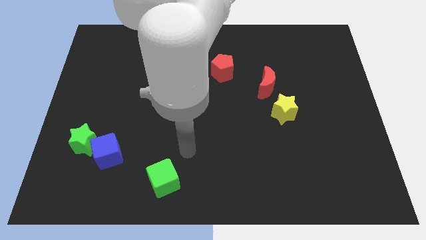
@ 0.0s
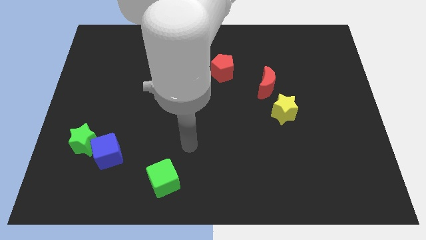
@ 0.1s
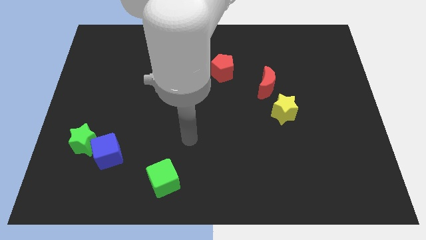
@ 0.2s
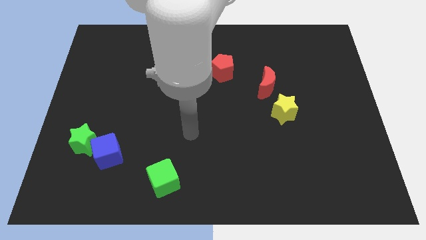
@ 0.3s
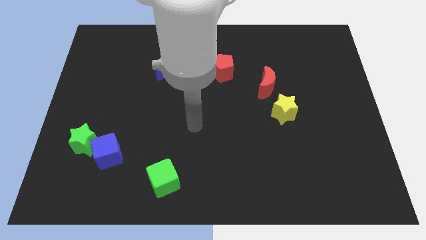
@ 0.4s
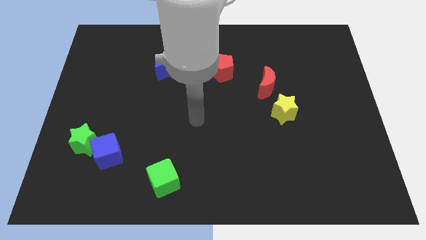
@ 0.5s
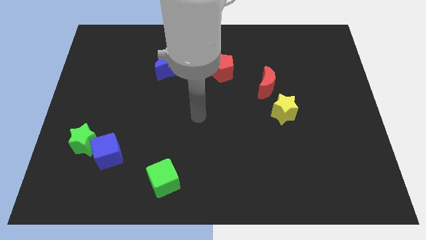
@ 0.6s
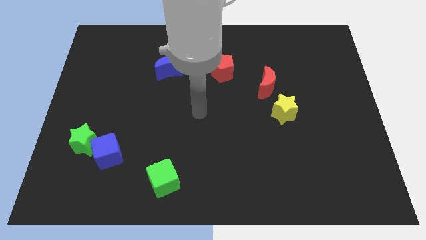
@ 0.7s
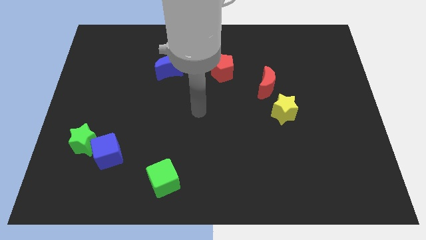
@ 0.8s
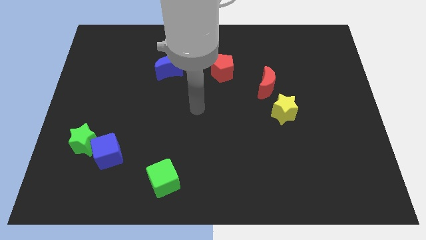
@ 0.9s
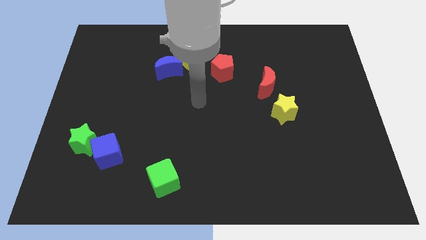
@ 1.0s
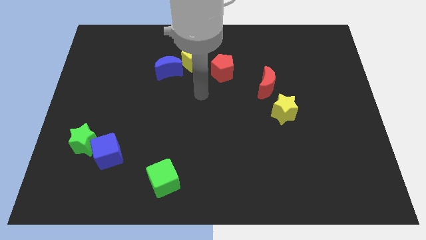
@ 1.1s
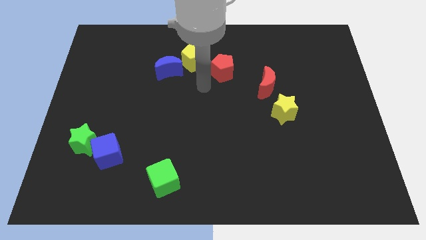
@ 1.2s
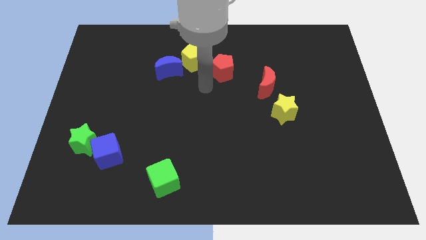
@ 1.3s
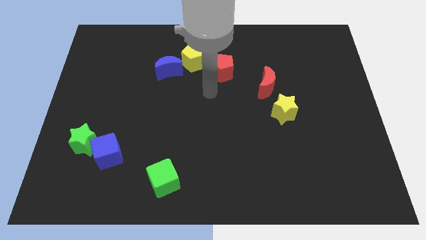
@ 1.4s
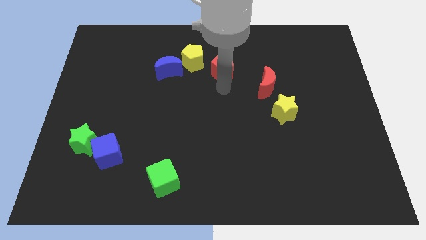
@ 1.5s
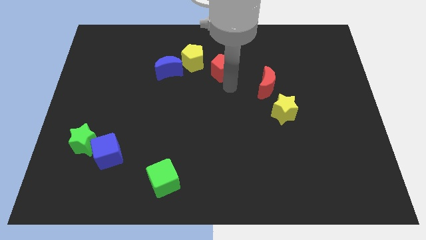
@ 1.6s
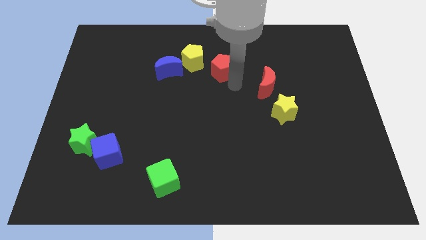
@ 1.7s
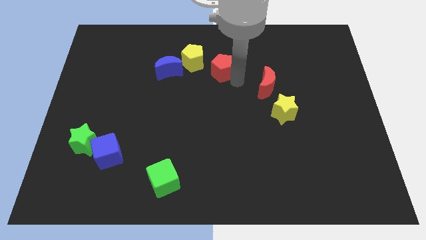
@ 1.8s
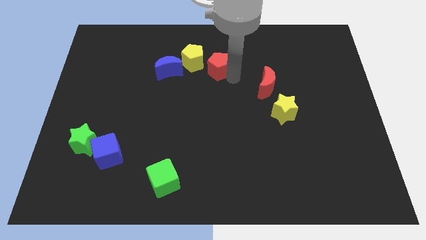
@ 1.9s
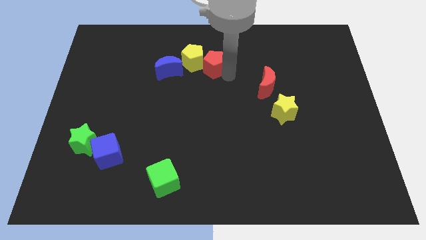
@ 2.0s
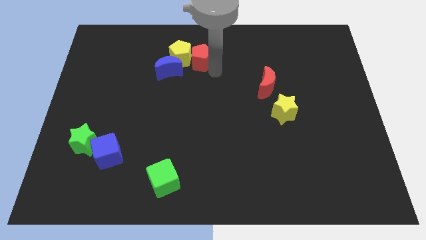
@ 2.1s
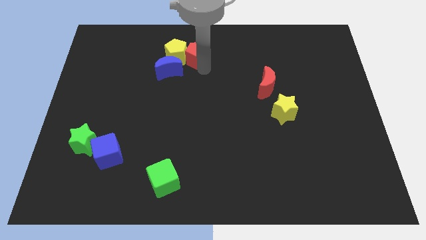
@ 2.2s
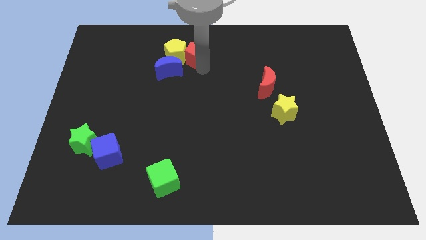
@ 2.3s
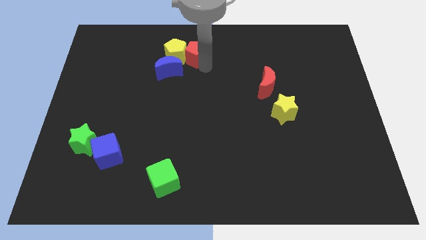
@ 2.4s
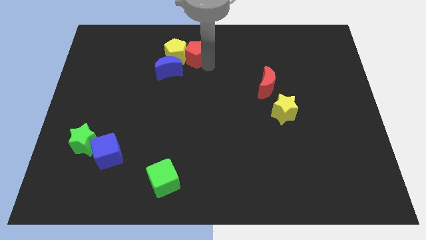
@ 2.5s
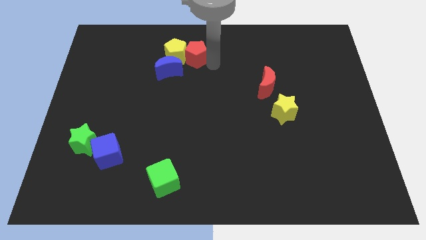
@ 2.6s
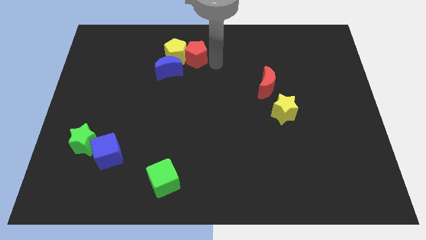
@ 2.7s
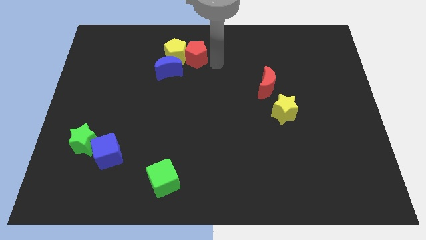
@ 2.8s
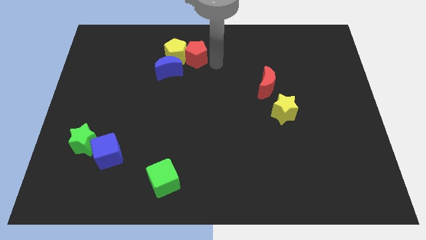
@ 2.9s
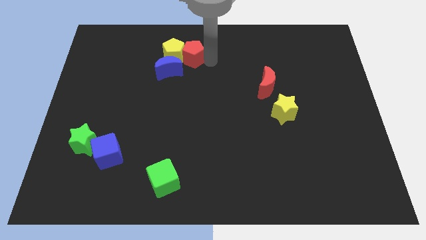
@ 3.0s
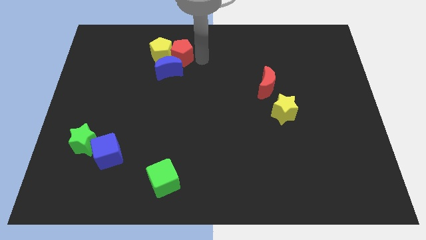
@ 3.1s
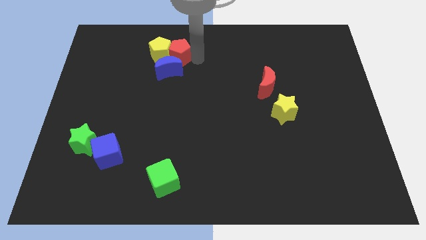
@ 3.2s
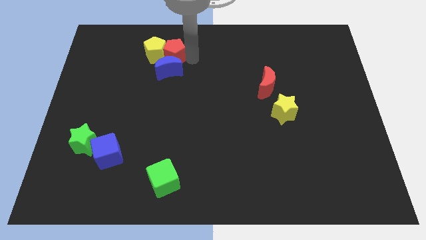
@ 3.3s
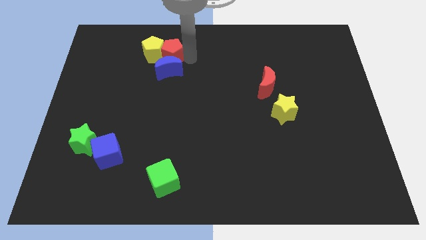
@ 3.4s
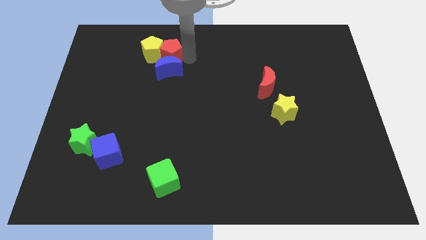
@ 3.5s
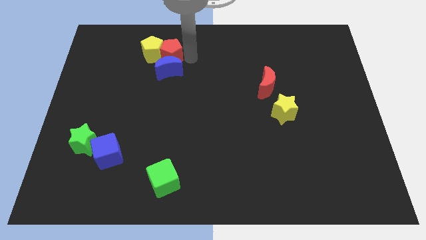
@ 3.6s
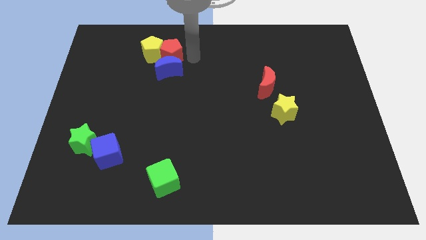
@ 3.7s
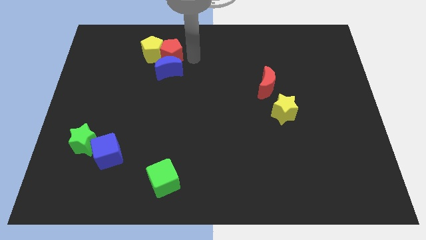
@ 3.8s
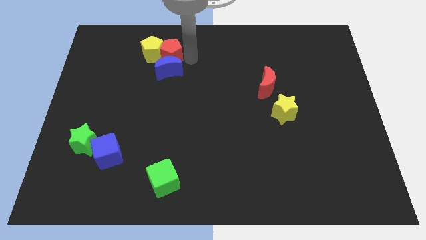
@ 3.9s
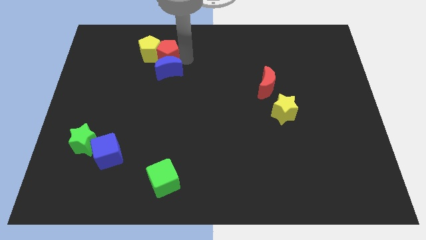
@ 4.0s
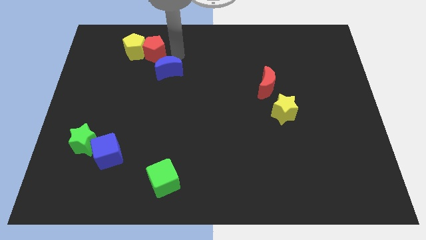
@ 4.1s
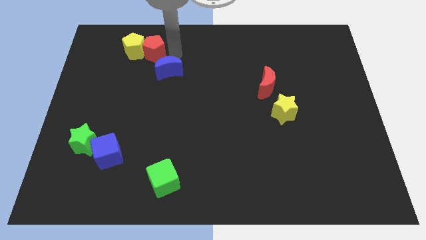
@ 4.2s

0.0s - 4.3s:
push the red pentagon and yellow pentagon towards top left

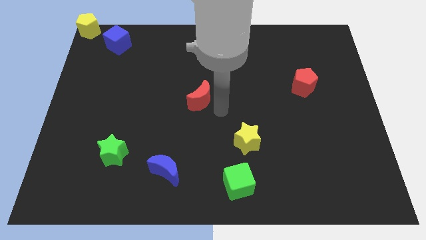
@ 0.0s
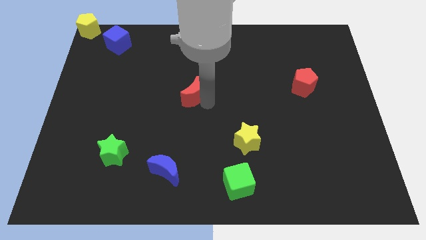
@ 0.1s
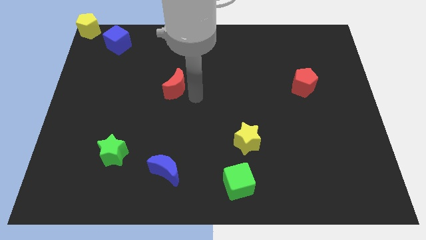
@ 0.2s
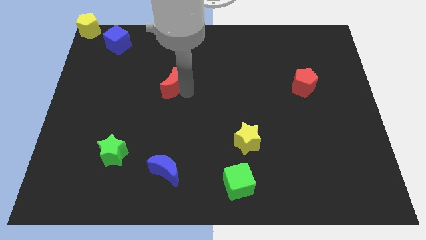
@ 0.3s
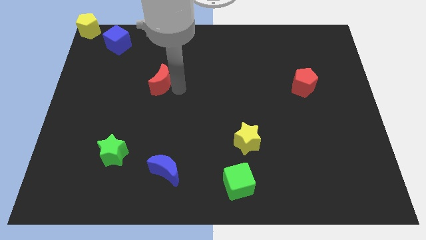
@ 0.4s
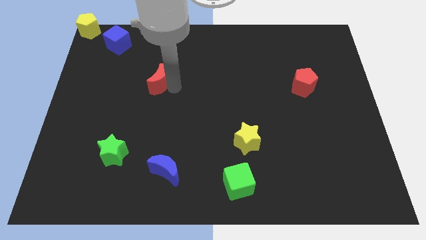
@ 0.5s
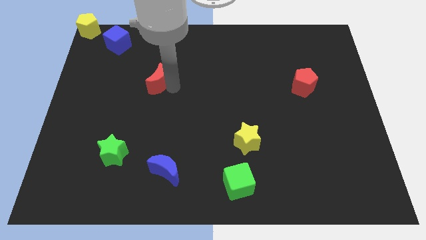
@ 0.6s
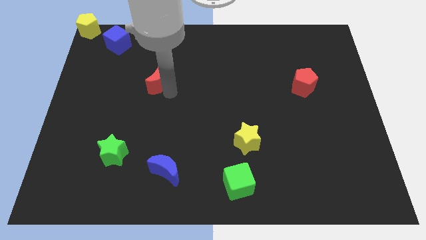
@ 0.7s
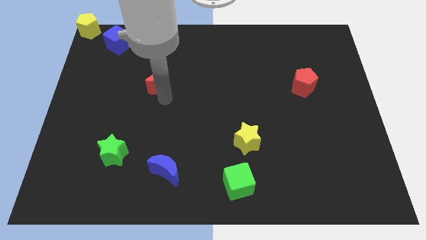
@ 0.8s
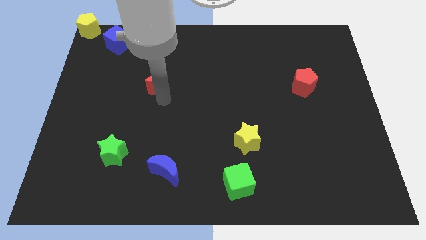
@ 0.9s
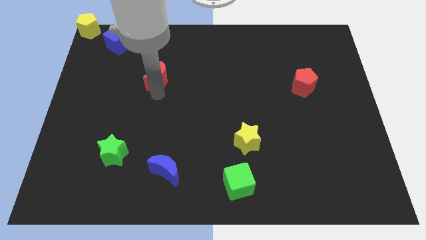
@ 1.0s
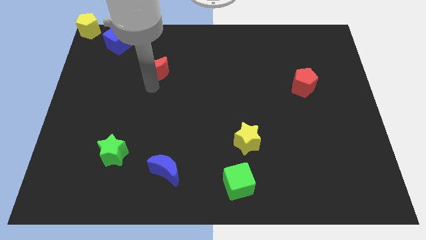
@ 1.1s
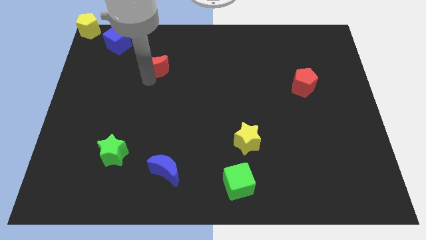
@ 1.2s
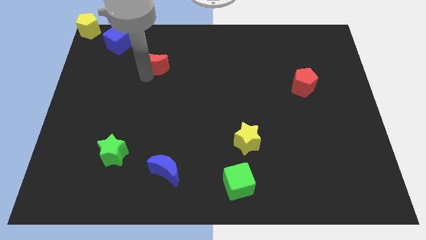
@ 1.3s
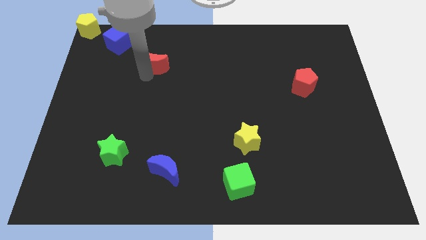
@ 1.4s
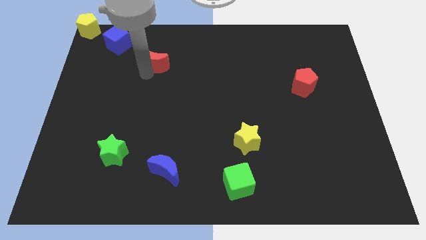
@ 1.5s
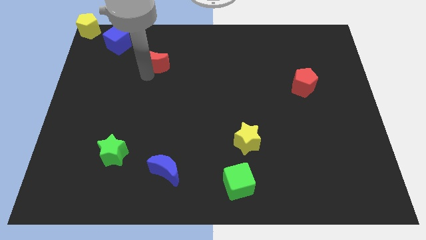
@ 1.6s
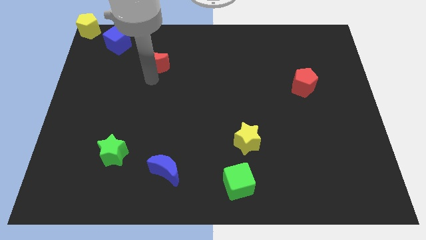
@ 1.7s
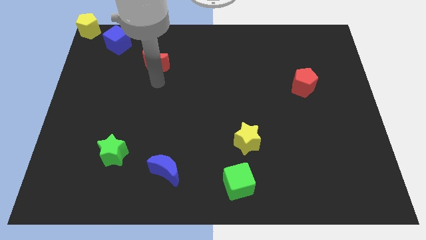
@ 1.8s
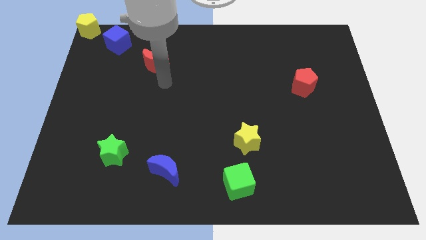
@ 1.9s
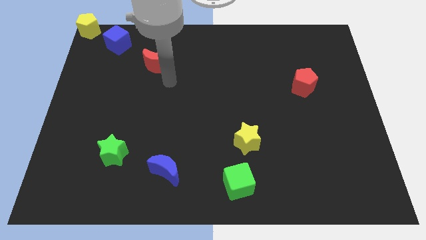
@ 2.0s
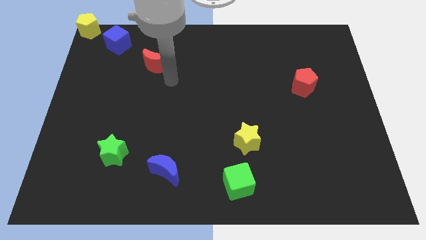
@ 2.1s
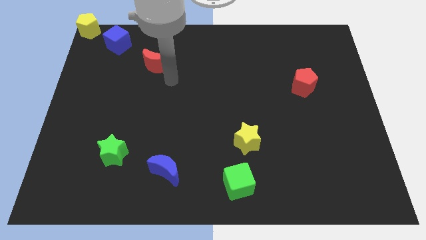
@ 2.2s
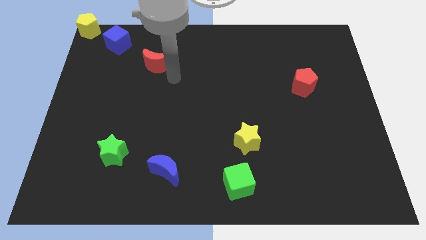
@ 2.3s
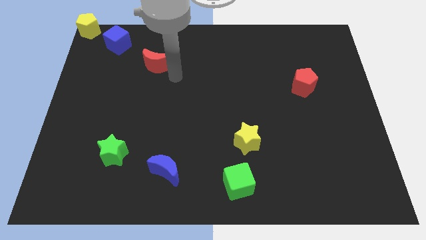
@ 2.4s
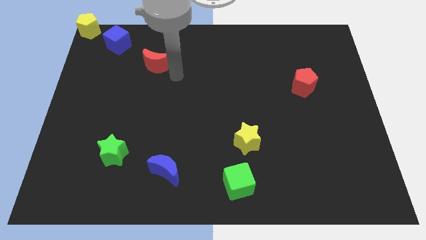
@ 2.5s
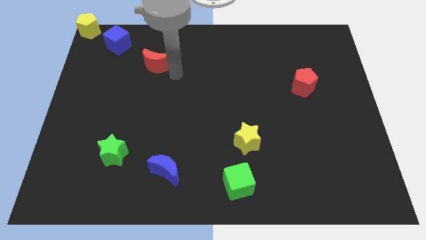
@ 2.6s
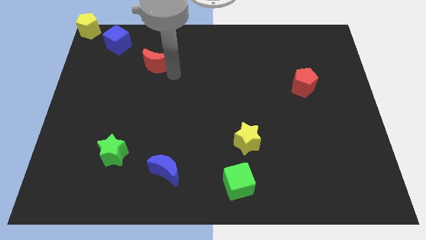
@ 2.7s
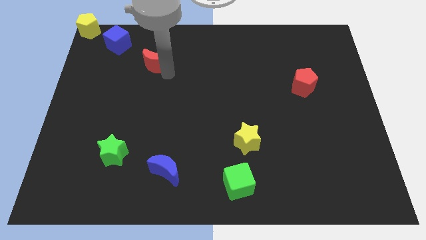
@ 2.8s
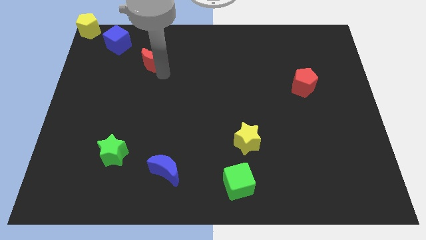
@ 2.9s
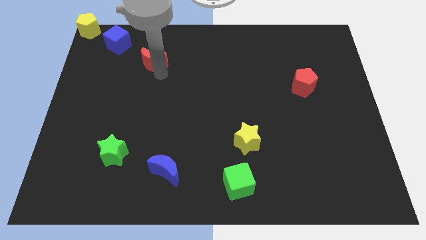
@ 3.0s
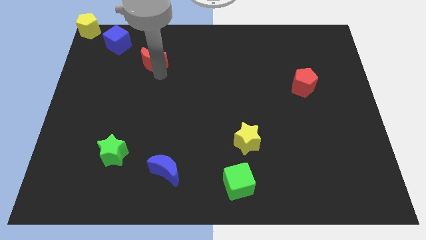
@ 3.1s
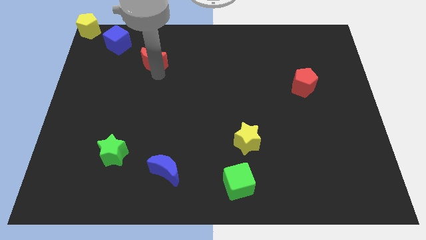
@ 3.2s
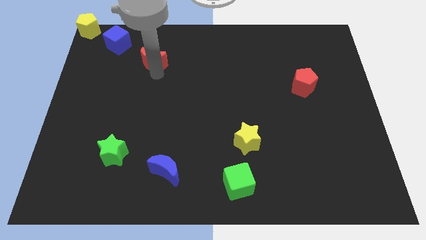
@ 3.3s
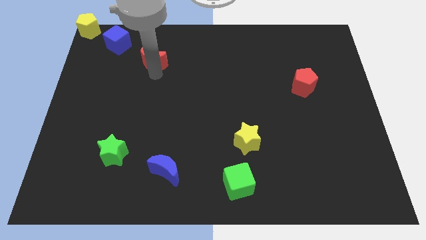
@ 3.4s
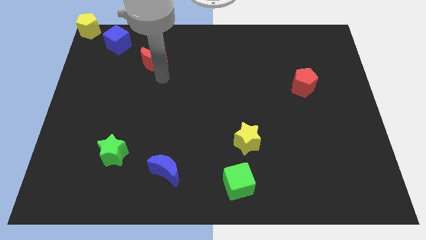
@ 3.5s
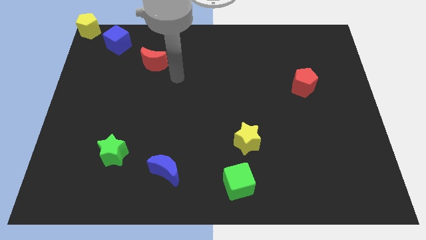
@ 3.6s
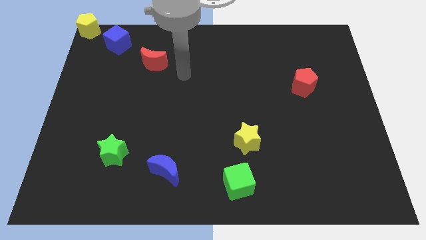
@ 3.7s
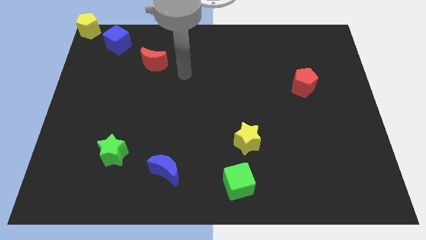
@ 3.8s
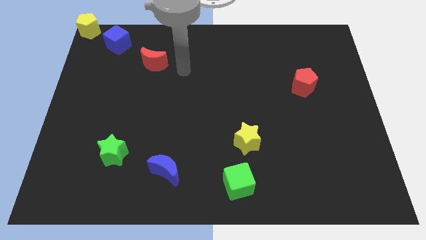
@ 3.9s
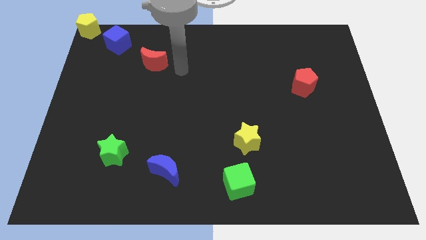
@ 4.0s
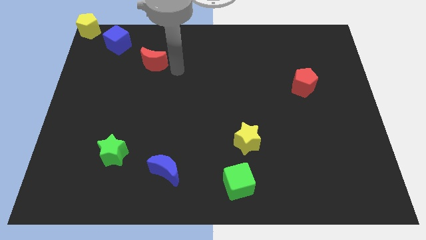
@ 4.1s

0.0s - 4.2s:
slide red moon towards blue cube

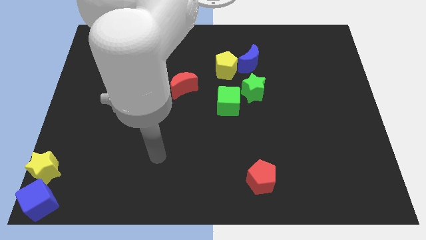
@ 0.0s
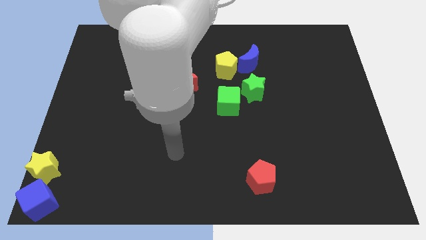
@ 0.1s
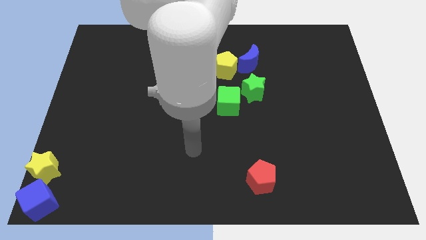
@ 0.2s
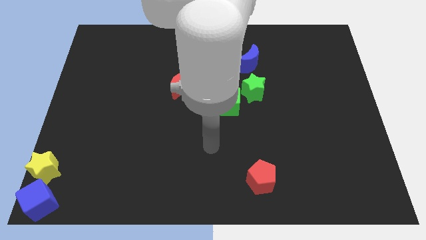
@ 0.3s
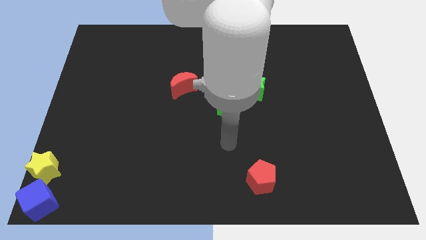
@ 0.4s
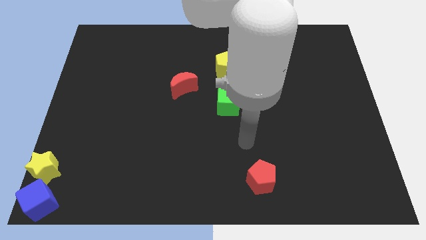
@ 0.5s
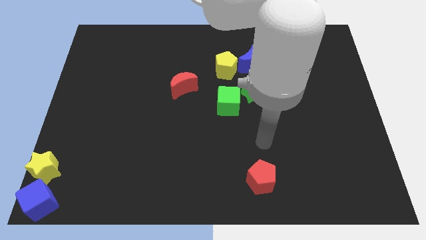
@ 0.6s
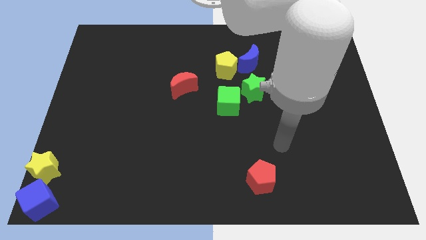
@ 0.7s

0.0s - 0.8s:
place arm on the top of red pentagon
